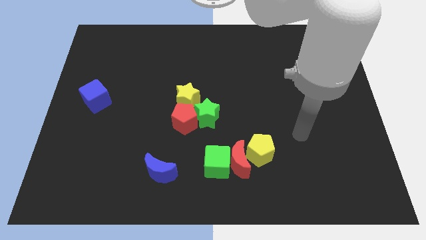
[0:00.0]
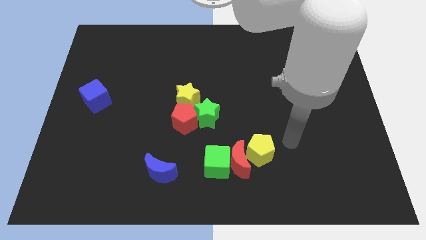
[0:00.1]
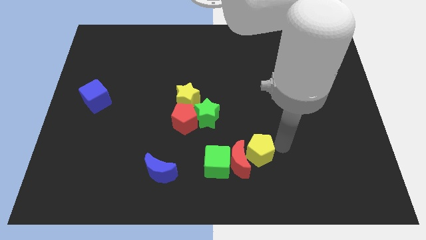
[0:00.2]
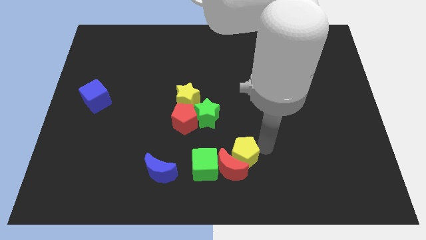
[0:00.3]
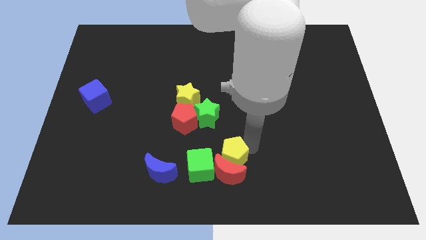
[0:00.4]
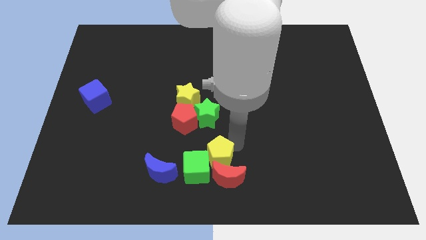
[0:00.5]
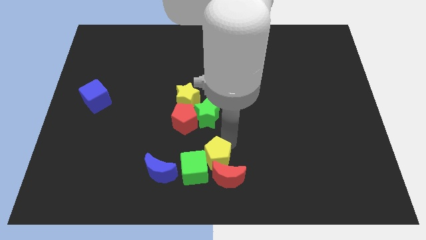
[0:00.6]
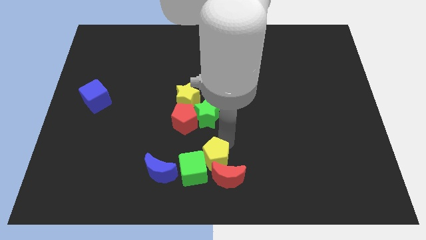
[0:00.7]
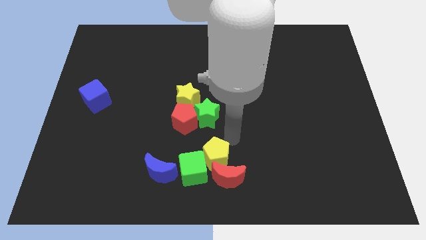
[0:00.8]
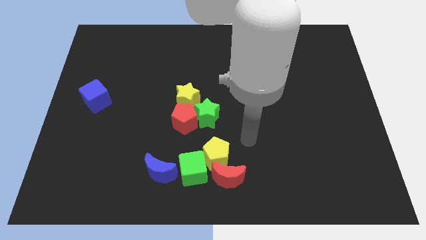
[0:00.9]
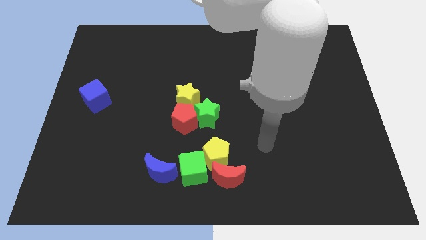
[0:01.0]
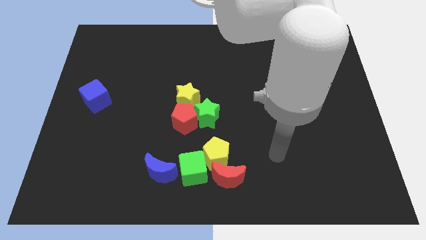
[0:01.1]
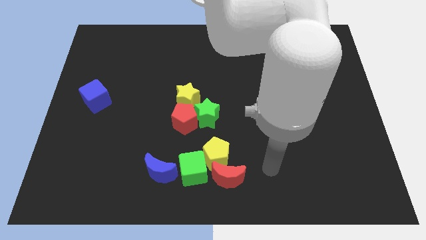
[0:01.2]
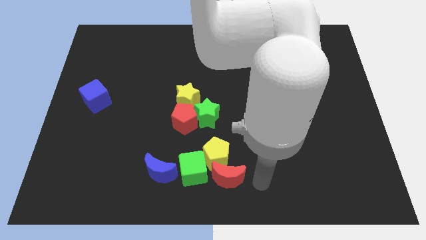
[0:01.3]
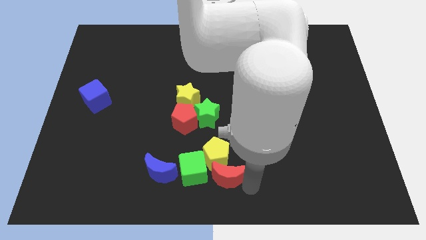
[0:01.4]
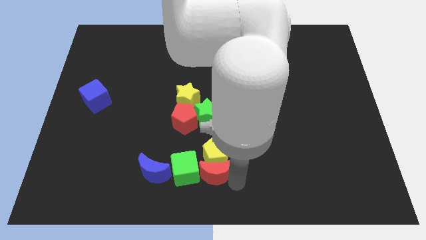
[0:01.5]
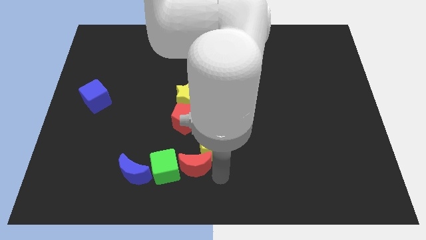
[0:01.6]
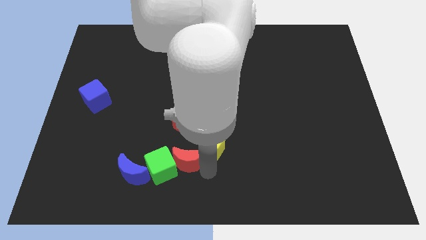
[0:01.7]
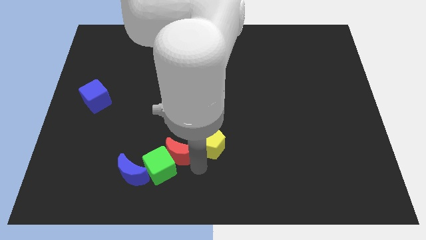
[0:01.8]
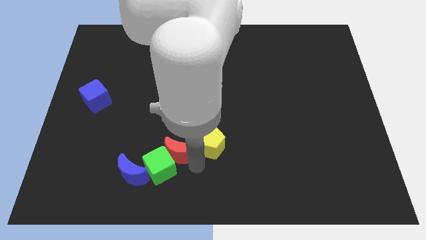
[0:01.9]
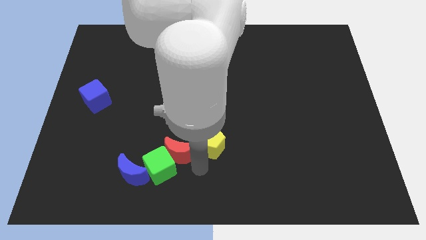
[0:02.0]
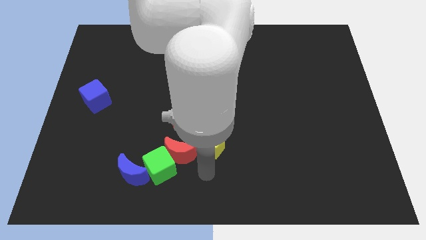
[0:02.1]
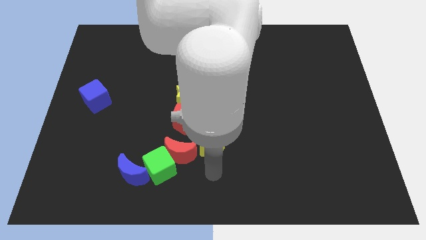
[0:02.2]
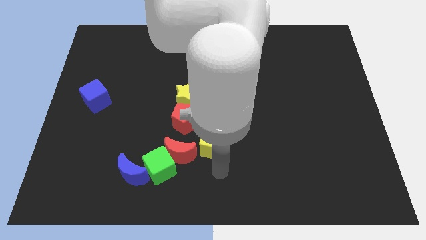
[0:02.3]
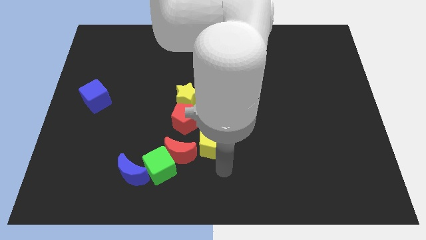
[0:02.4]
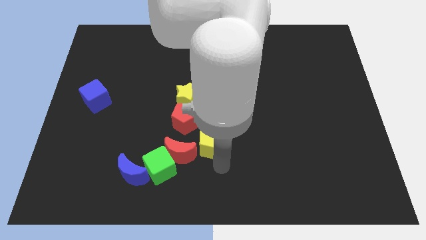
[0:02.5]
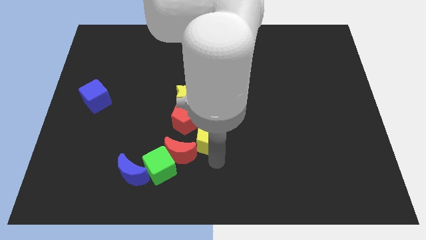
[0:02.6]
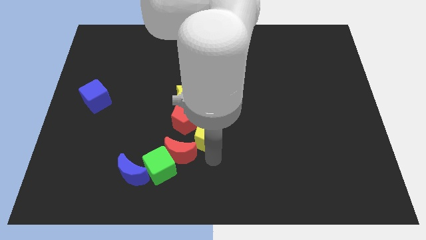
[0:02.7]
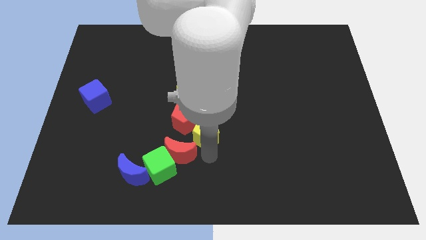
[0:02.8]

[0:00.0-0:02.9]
move the yellow pentagon below the green star

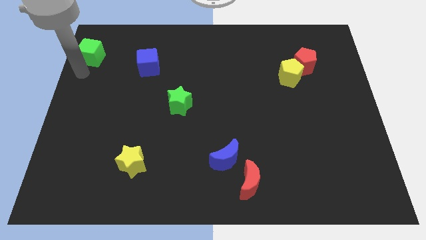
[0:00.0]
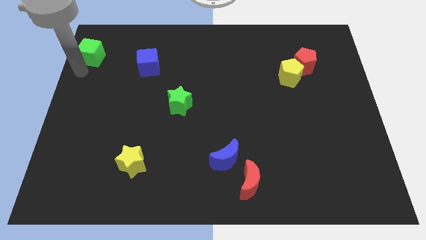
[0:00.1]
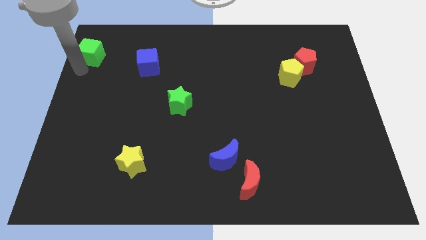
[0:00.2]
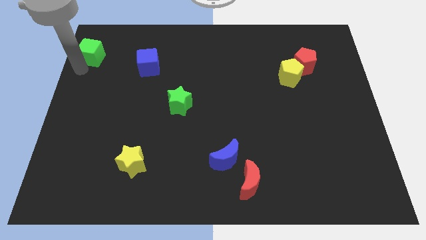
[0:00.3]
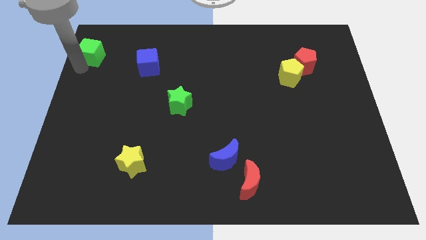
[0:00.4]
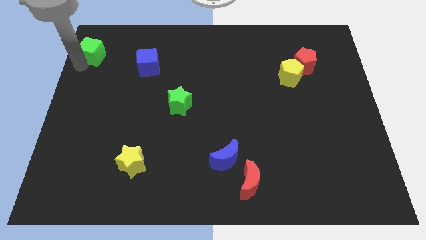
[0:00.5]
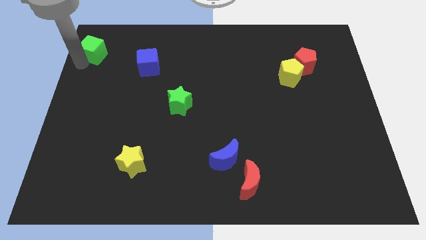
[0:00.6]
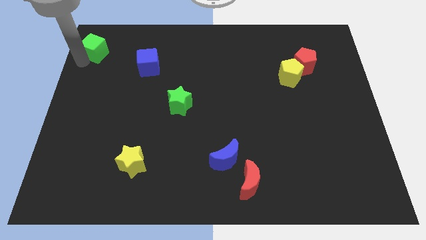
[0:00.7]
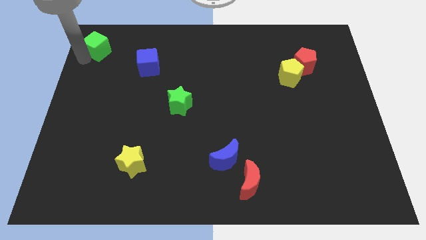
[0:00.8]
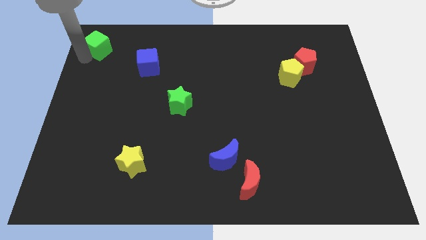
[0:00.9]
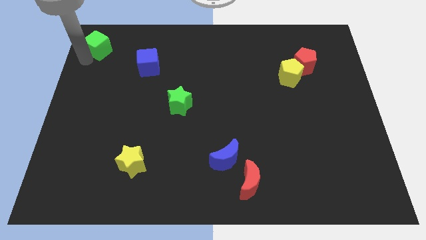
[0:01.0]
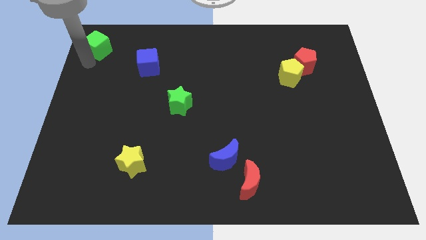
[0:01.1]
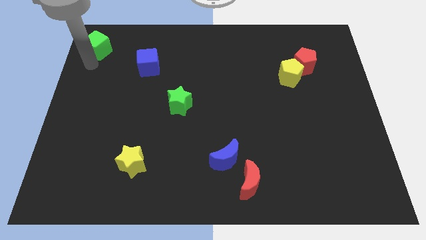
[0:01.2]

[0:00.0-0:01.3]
place green cube to the top left corner of the board

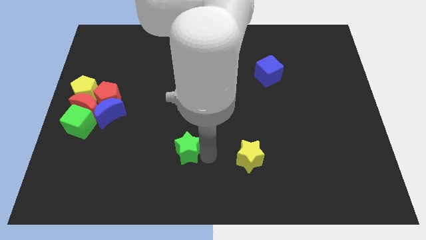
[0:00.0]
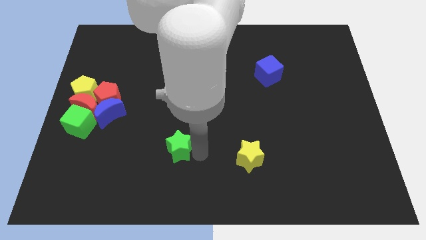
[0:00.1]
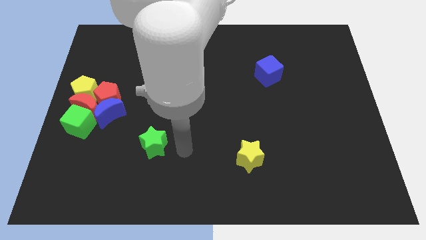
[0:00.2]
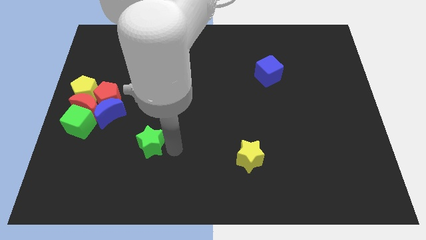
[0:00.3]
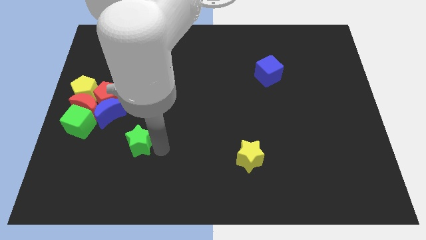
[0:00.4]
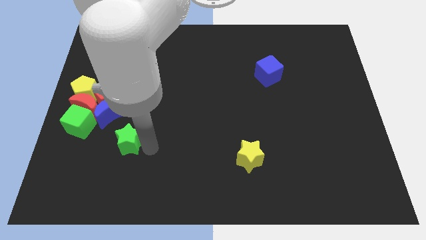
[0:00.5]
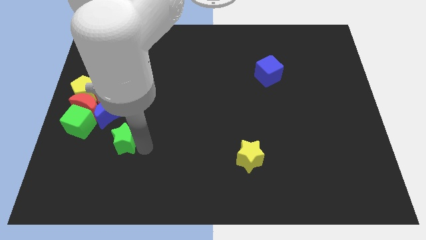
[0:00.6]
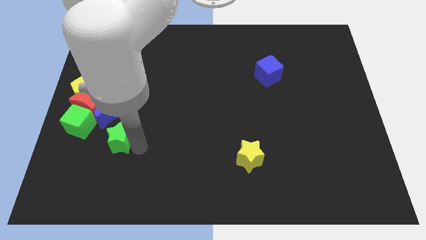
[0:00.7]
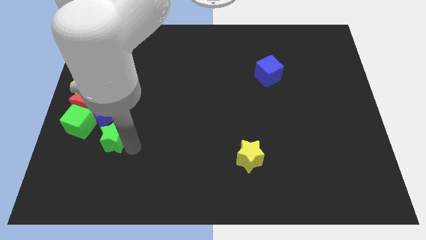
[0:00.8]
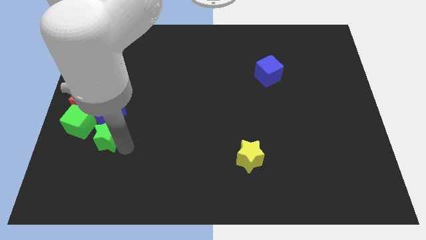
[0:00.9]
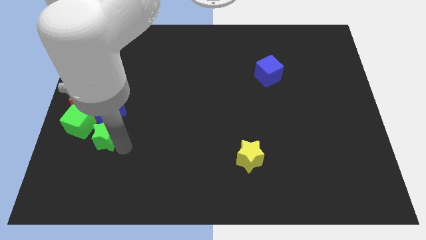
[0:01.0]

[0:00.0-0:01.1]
move the green star slightly towards the green cube

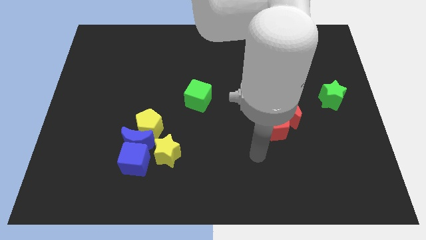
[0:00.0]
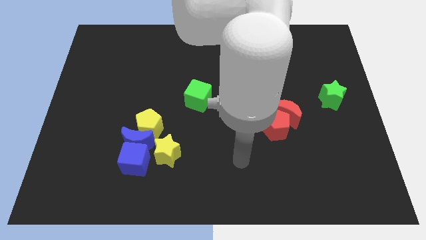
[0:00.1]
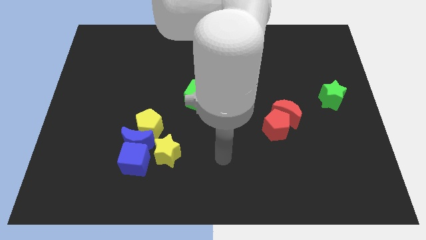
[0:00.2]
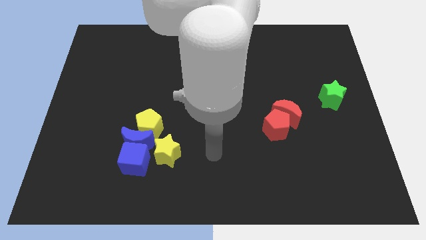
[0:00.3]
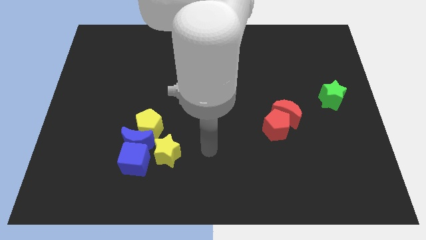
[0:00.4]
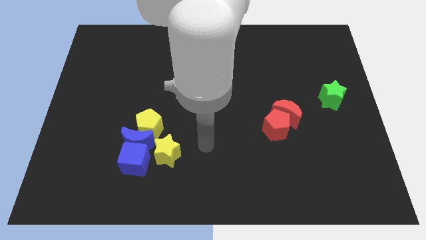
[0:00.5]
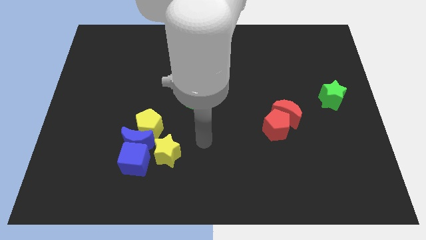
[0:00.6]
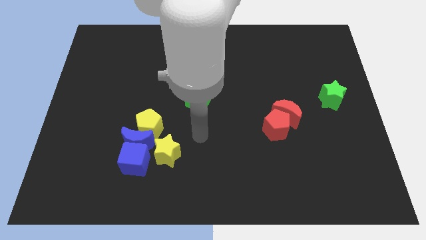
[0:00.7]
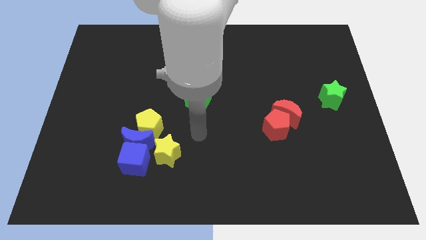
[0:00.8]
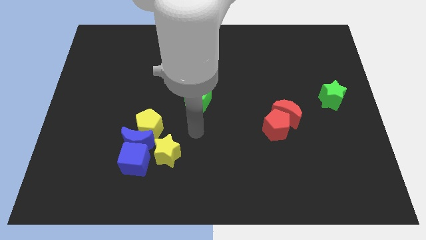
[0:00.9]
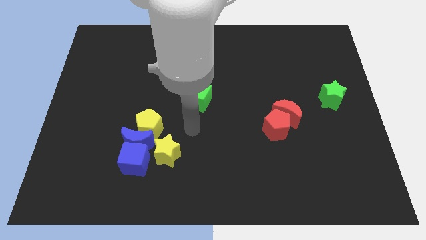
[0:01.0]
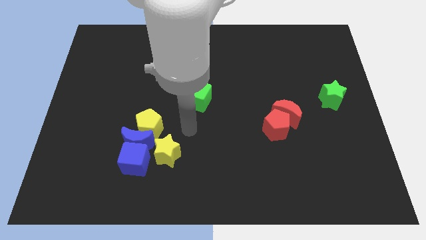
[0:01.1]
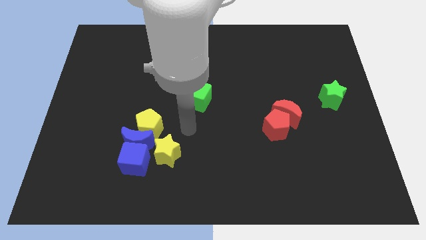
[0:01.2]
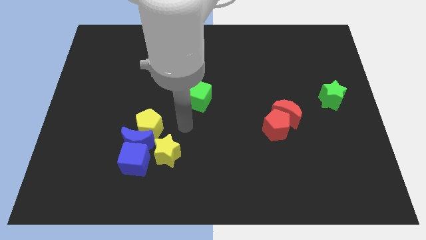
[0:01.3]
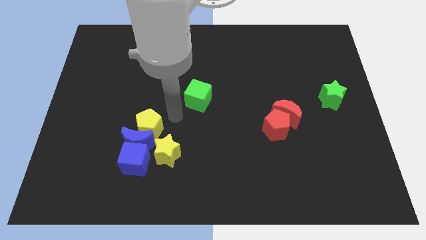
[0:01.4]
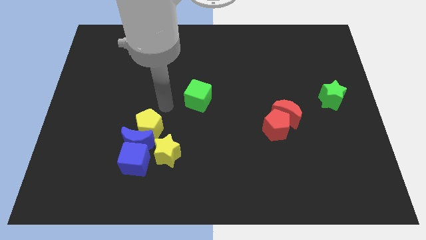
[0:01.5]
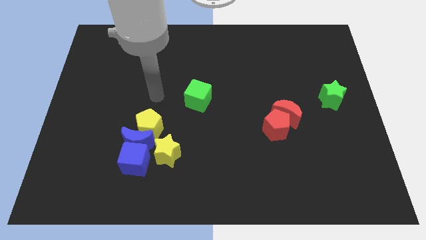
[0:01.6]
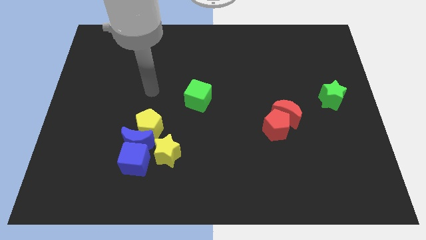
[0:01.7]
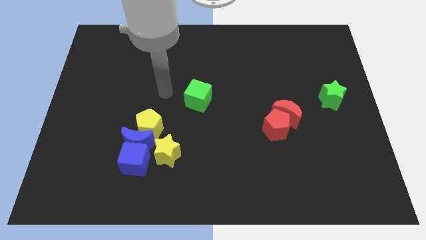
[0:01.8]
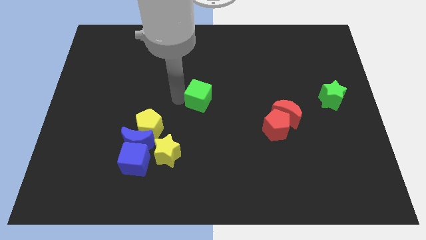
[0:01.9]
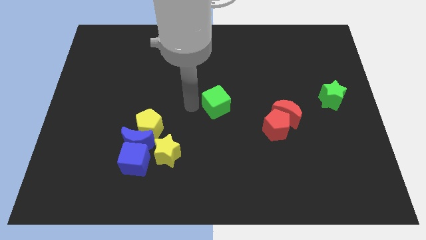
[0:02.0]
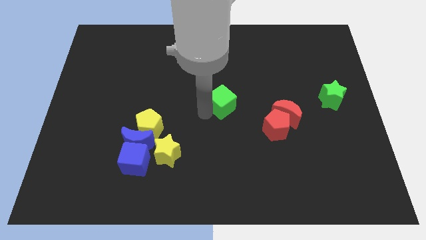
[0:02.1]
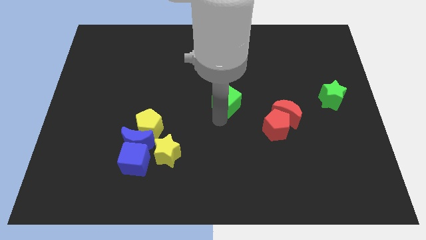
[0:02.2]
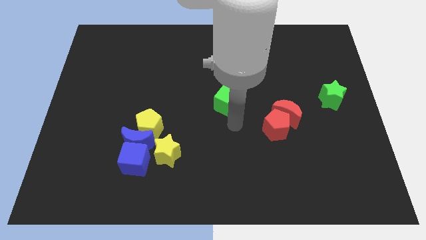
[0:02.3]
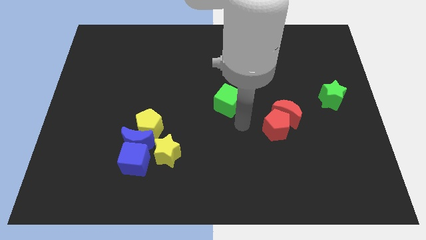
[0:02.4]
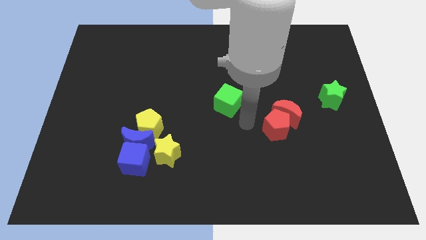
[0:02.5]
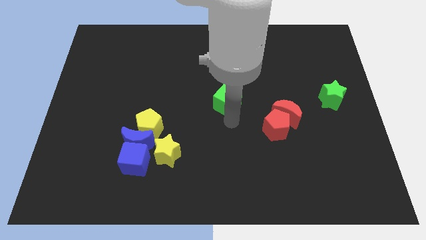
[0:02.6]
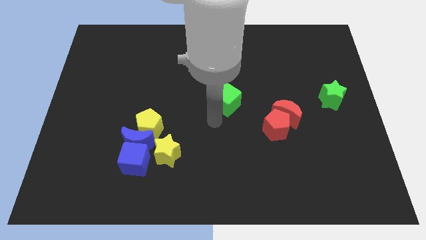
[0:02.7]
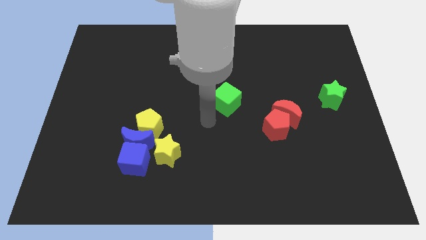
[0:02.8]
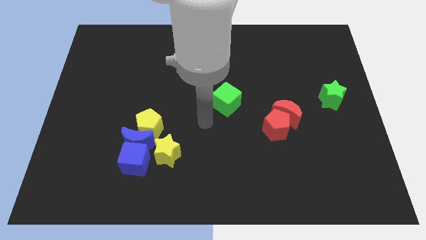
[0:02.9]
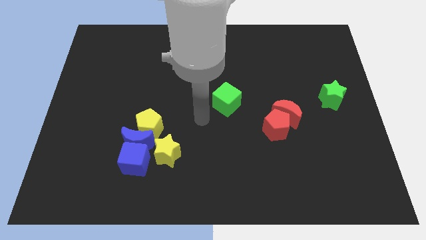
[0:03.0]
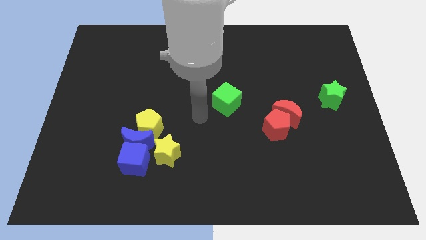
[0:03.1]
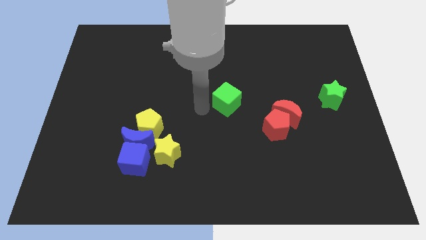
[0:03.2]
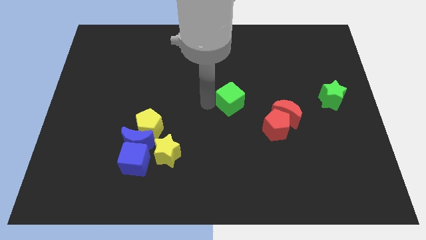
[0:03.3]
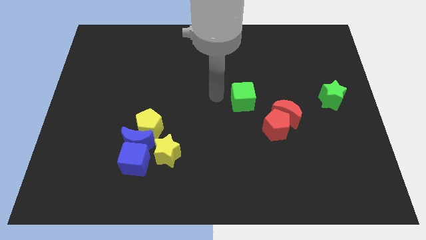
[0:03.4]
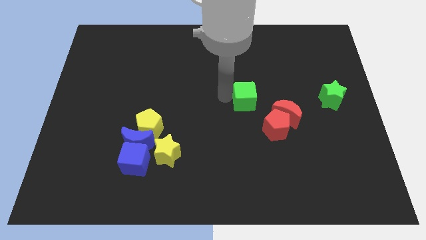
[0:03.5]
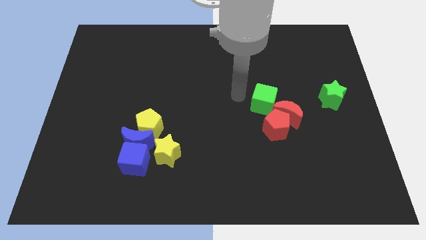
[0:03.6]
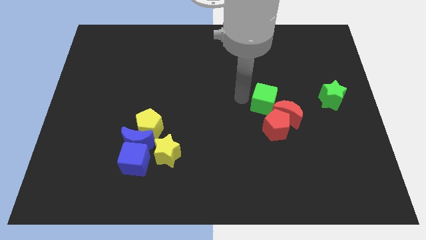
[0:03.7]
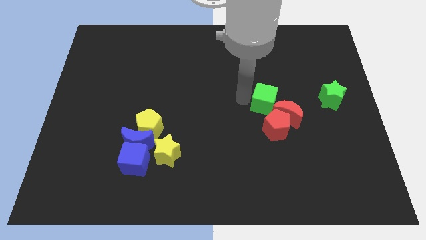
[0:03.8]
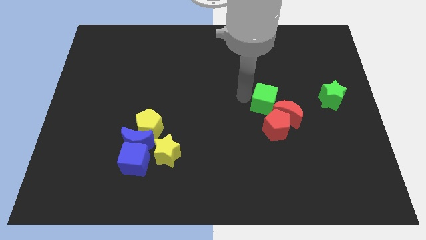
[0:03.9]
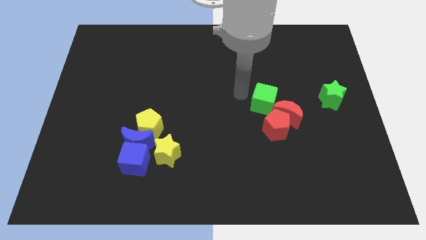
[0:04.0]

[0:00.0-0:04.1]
push the green cube into the red moon
